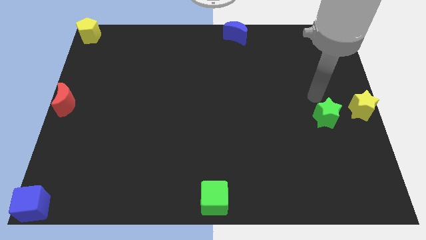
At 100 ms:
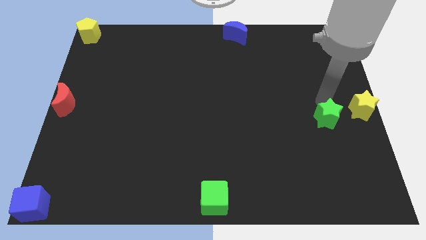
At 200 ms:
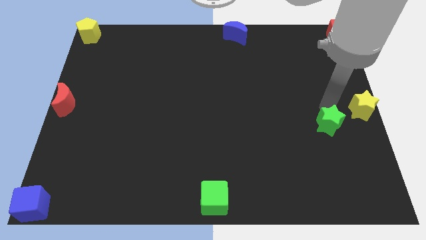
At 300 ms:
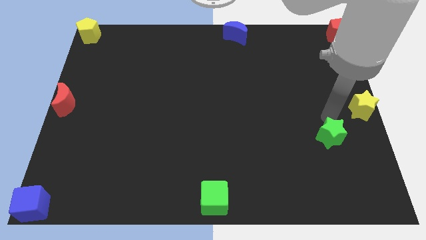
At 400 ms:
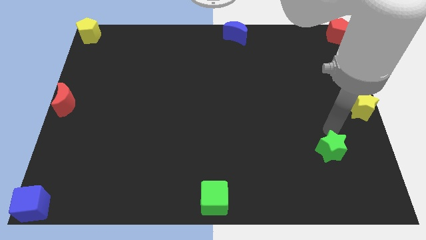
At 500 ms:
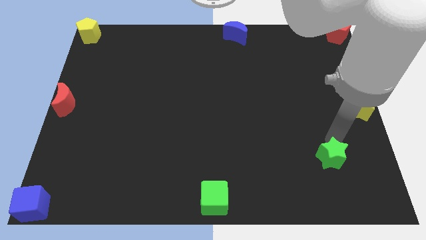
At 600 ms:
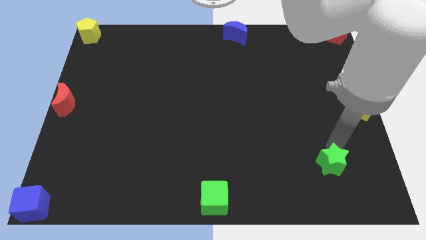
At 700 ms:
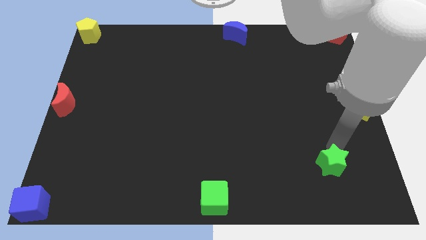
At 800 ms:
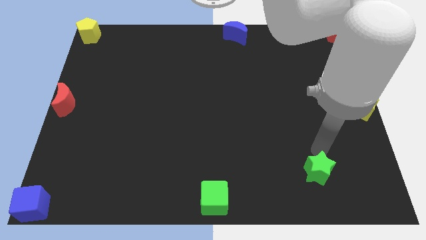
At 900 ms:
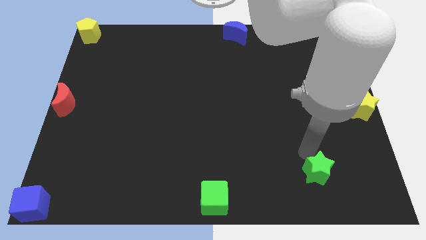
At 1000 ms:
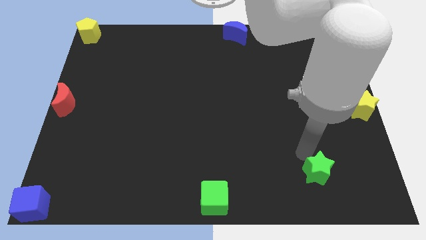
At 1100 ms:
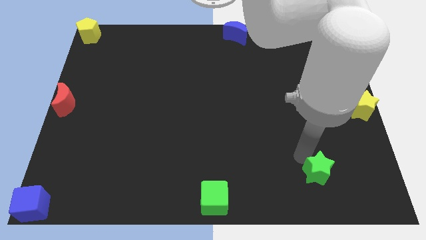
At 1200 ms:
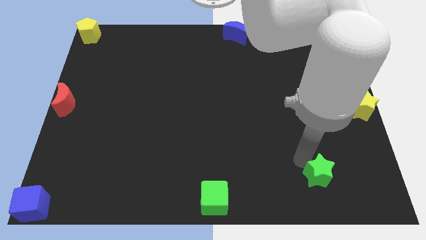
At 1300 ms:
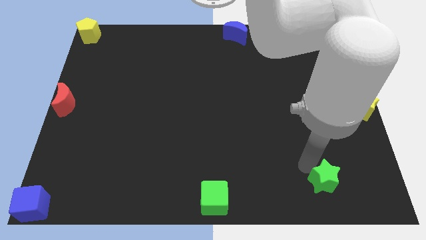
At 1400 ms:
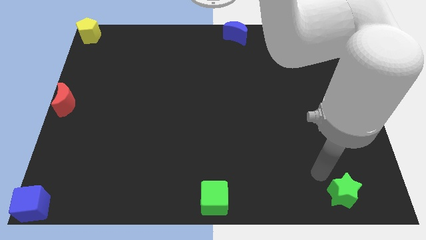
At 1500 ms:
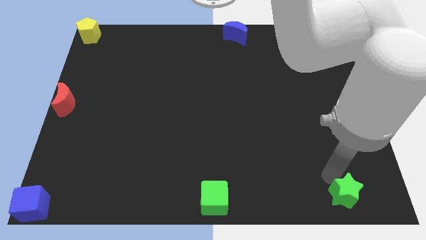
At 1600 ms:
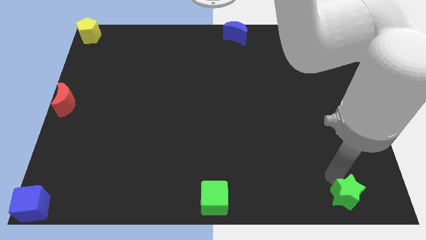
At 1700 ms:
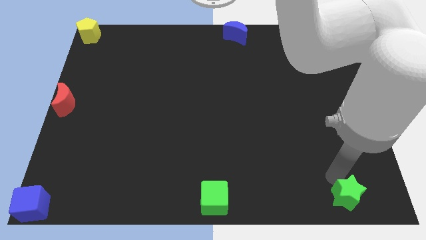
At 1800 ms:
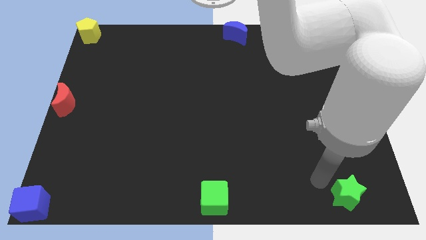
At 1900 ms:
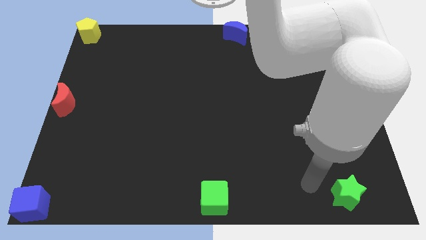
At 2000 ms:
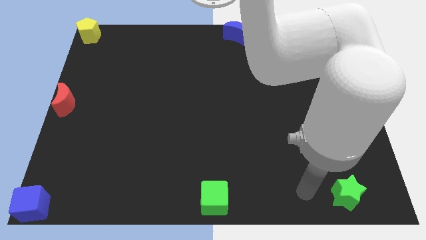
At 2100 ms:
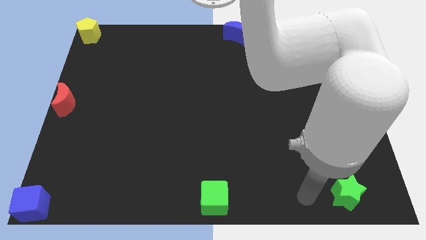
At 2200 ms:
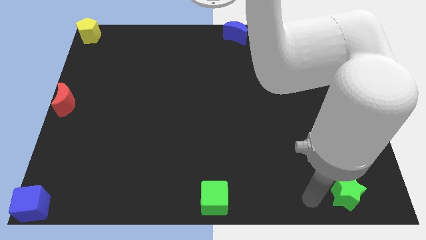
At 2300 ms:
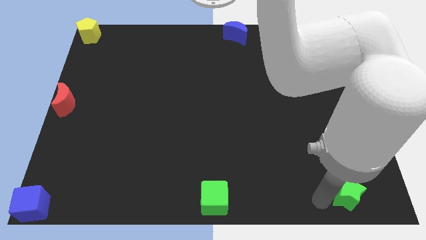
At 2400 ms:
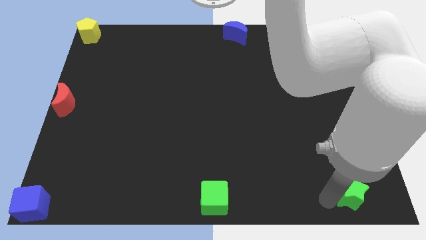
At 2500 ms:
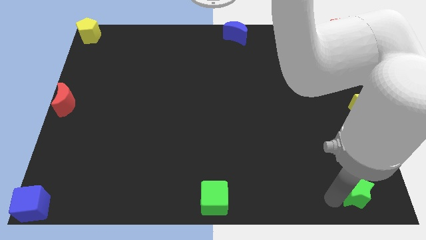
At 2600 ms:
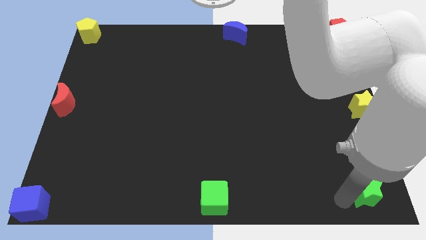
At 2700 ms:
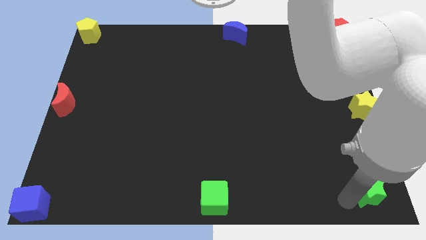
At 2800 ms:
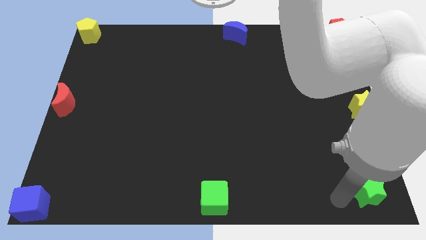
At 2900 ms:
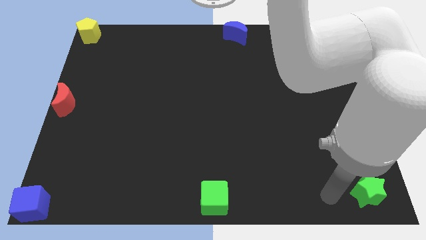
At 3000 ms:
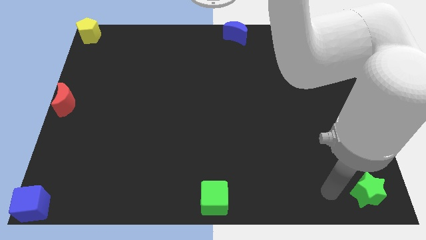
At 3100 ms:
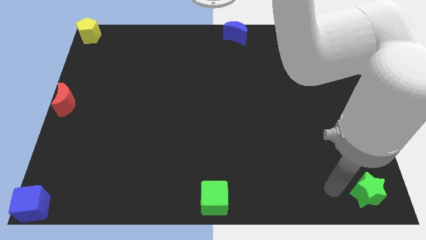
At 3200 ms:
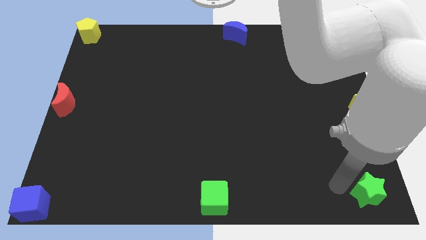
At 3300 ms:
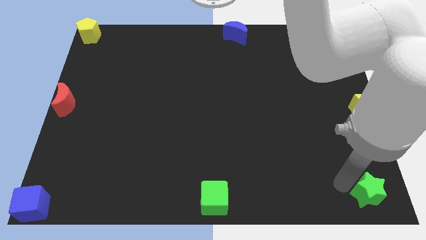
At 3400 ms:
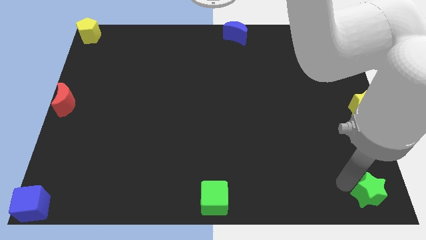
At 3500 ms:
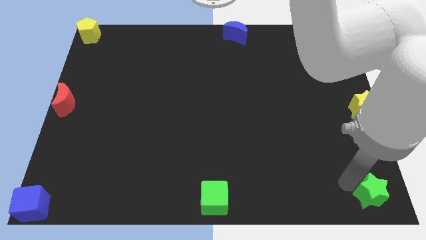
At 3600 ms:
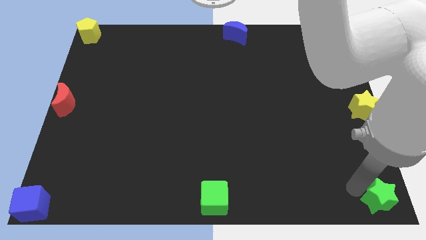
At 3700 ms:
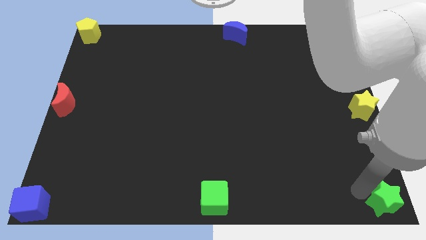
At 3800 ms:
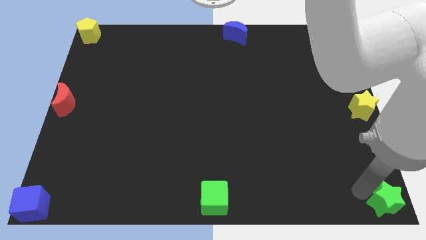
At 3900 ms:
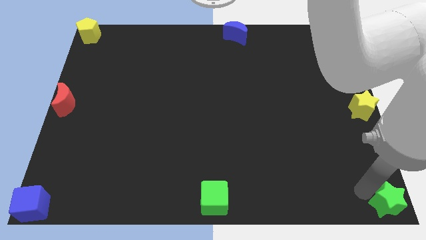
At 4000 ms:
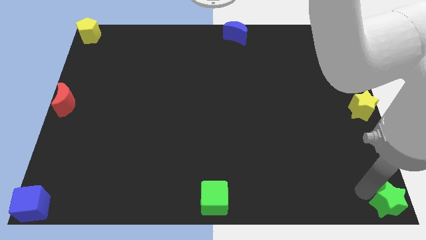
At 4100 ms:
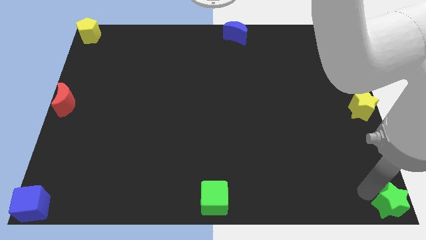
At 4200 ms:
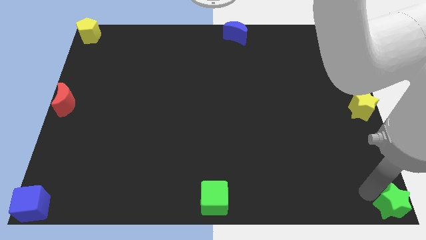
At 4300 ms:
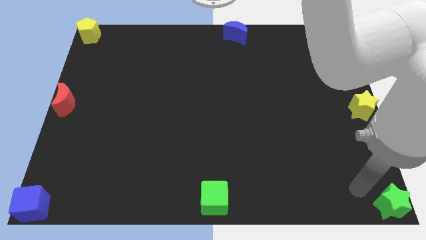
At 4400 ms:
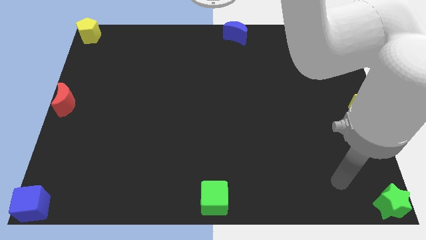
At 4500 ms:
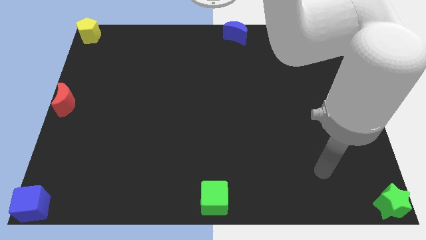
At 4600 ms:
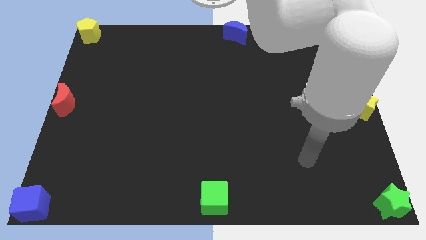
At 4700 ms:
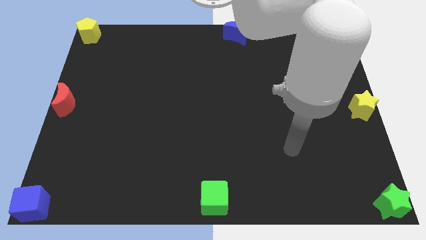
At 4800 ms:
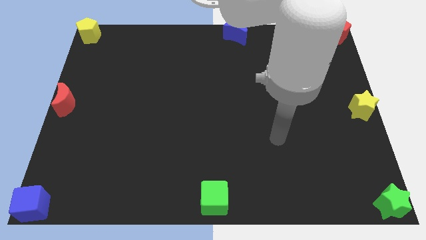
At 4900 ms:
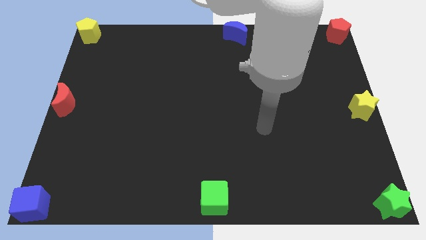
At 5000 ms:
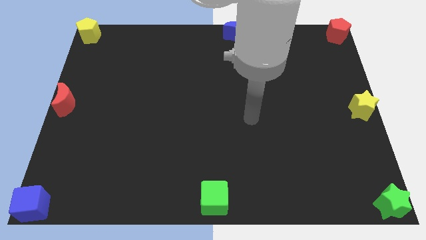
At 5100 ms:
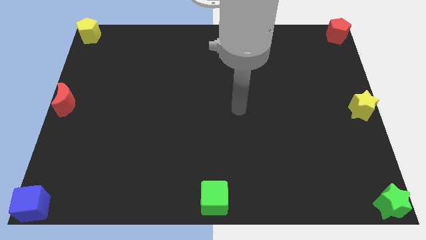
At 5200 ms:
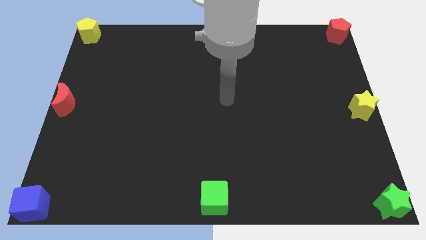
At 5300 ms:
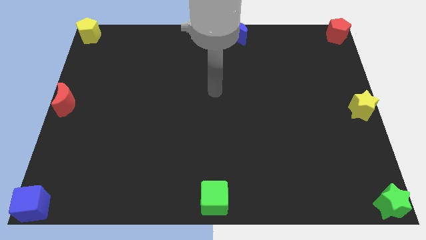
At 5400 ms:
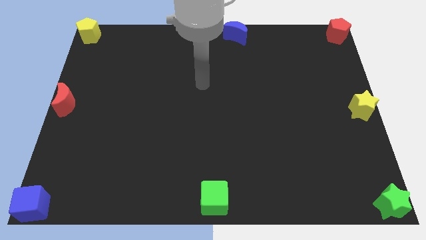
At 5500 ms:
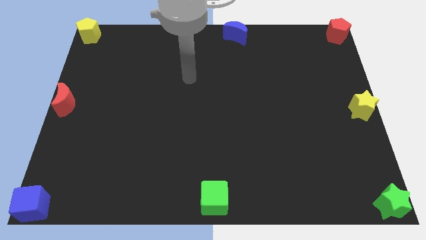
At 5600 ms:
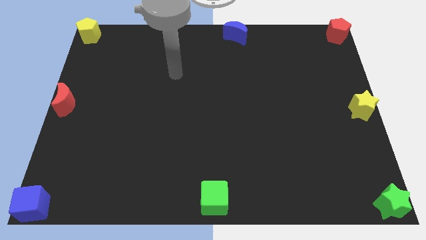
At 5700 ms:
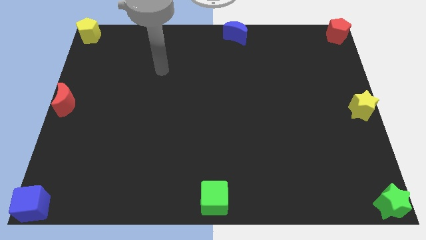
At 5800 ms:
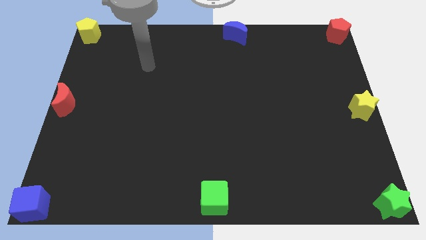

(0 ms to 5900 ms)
move the green star to the bottom right of the board

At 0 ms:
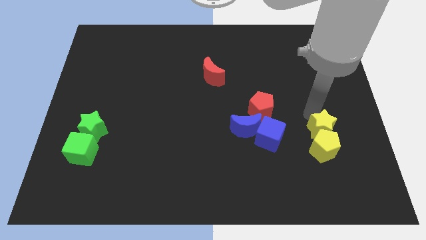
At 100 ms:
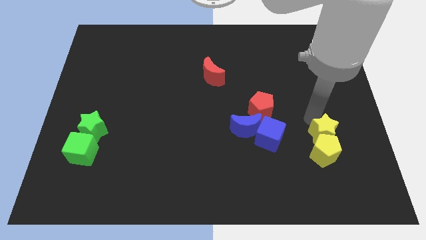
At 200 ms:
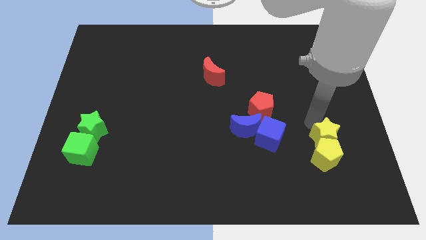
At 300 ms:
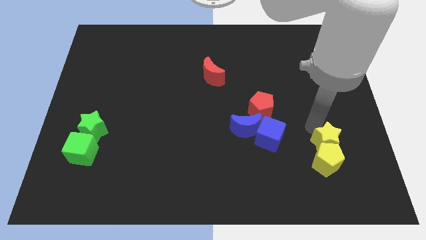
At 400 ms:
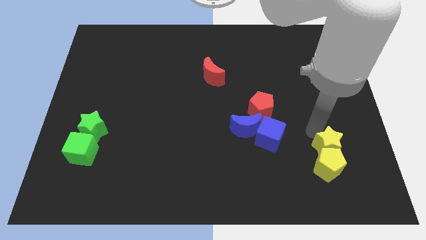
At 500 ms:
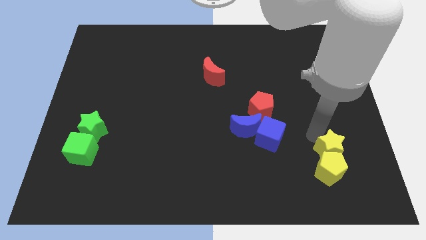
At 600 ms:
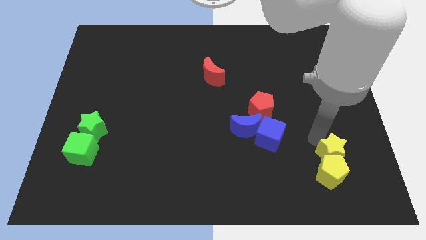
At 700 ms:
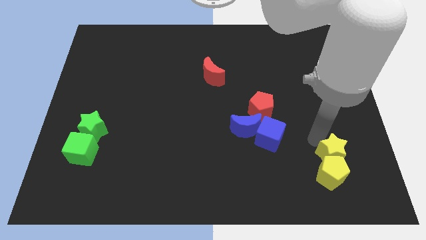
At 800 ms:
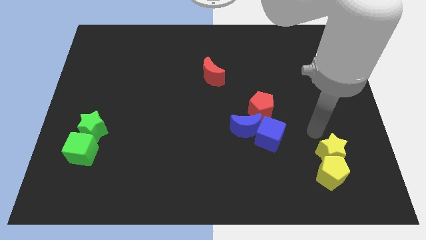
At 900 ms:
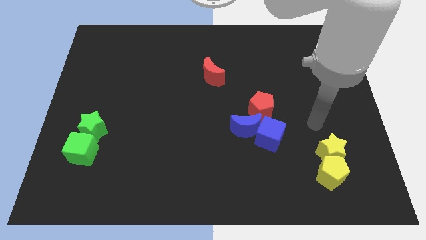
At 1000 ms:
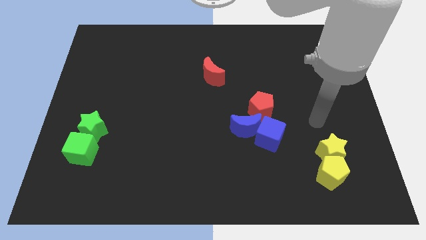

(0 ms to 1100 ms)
push the yellow star slightly to the bottom right along with the yellow pentagon

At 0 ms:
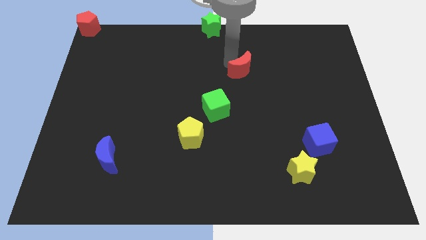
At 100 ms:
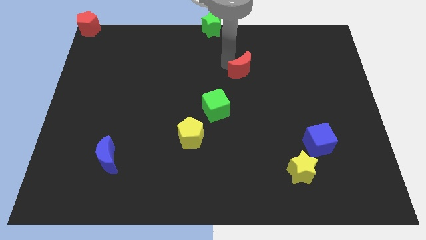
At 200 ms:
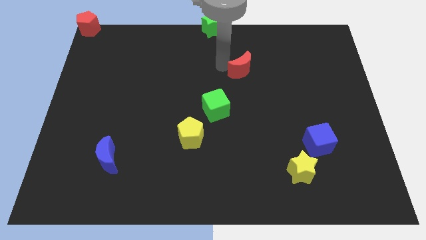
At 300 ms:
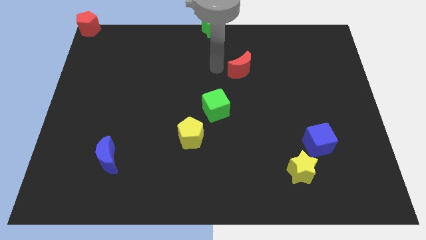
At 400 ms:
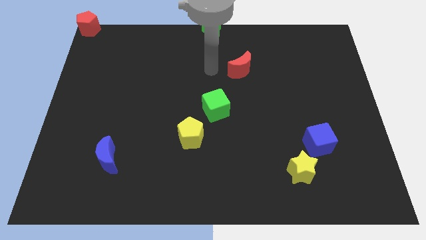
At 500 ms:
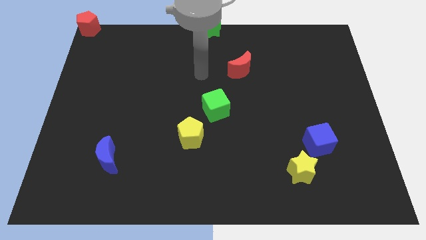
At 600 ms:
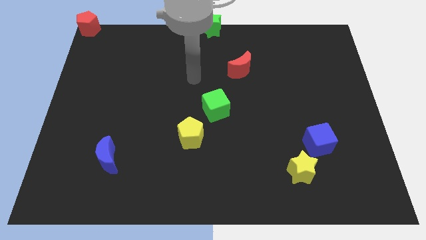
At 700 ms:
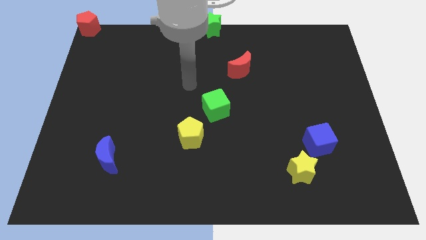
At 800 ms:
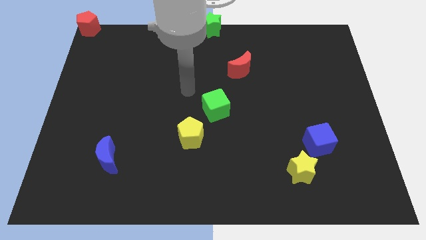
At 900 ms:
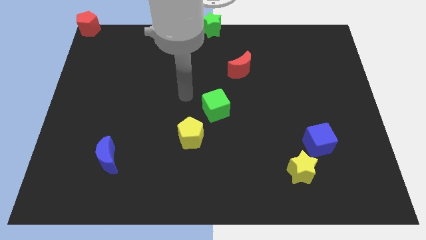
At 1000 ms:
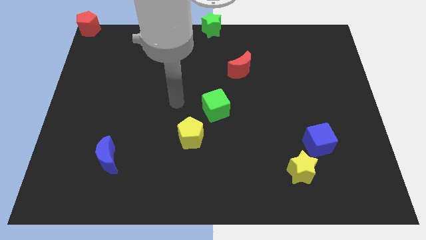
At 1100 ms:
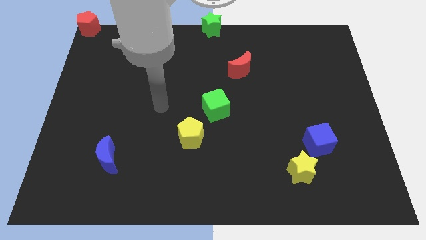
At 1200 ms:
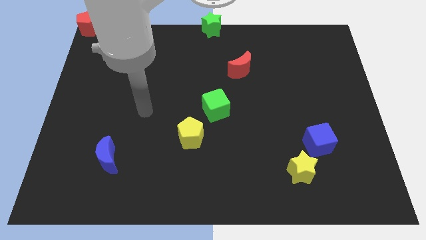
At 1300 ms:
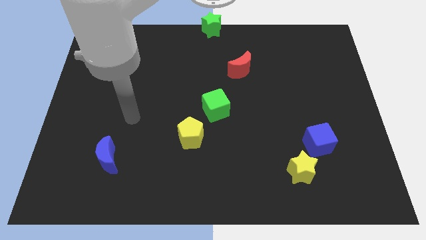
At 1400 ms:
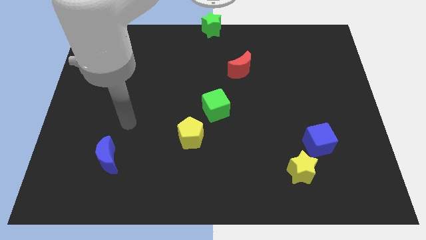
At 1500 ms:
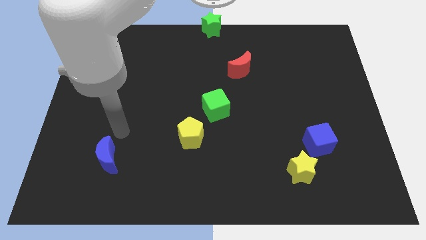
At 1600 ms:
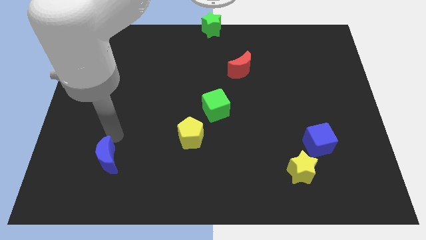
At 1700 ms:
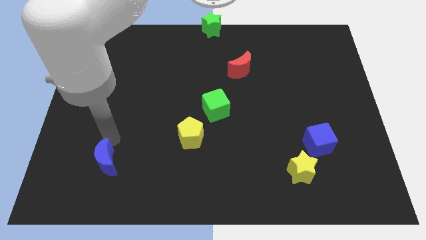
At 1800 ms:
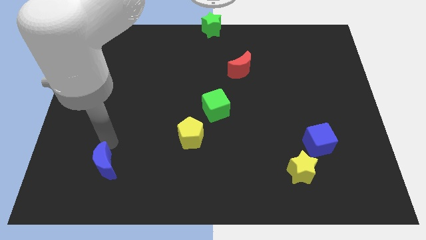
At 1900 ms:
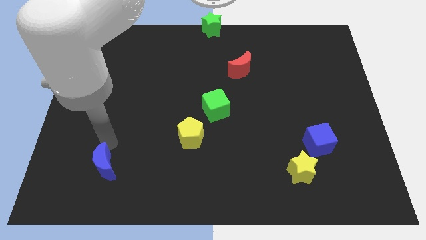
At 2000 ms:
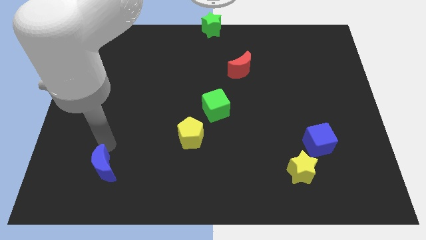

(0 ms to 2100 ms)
slide your arm diagonally towards the blue moon
